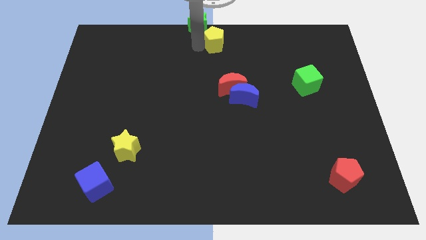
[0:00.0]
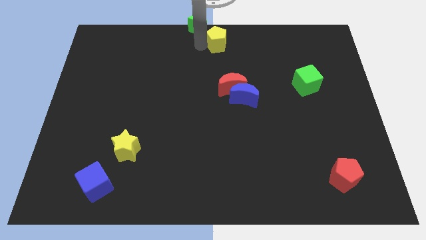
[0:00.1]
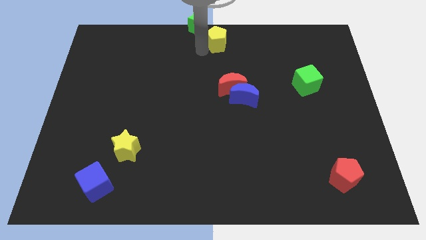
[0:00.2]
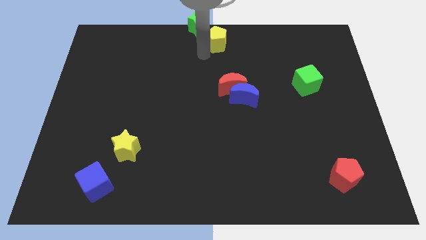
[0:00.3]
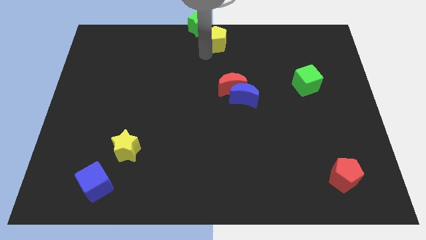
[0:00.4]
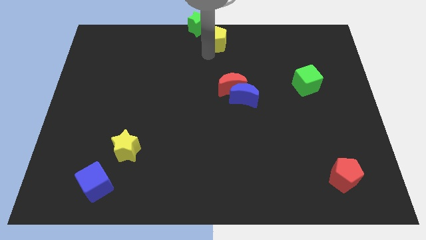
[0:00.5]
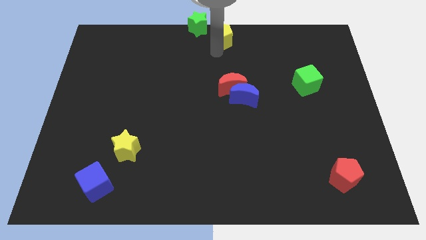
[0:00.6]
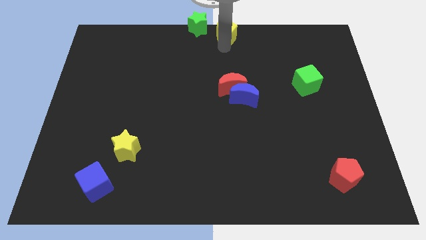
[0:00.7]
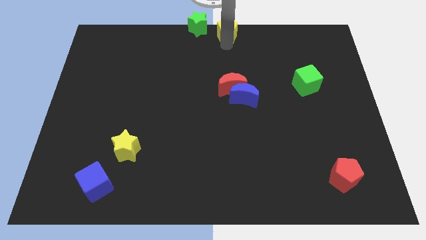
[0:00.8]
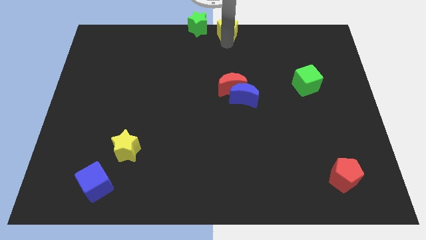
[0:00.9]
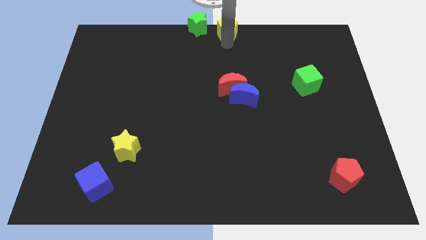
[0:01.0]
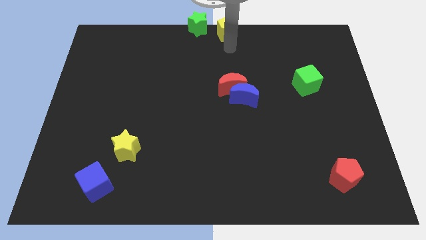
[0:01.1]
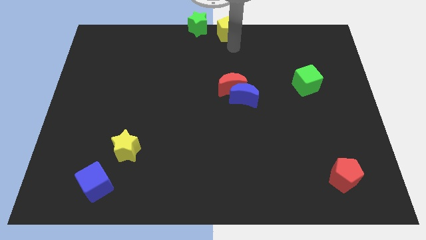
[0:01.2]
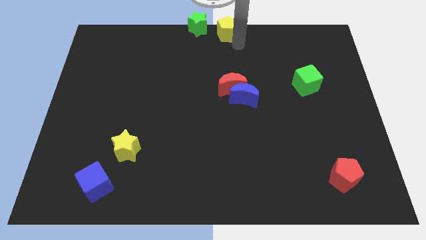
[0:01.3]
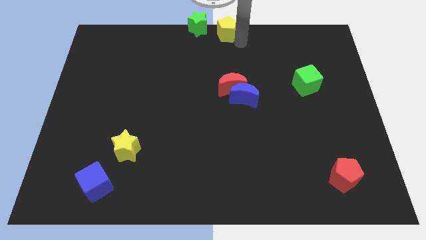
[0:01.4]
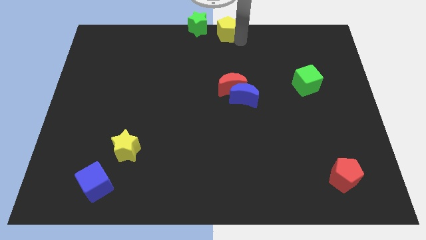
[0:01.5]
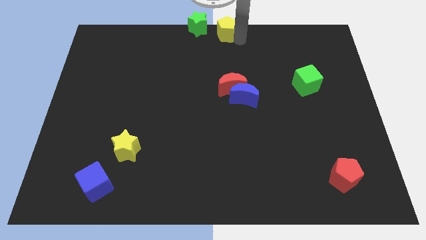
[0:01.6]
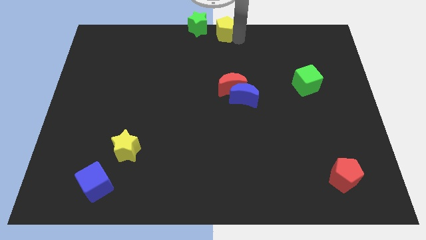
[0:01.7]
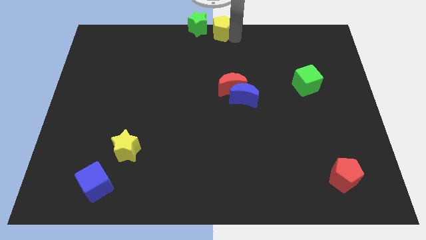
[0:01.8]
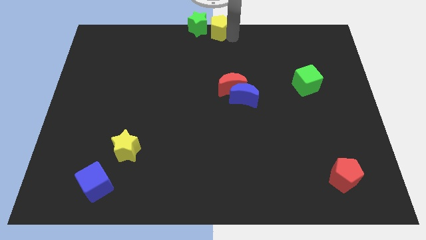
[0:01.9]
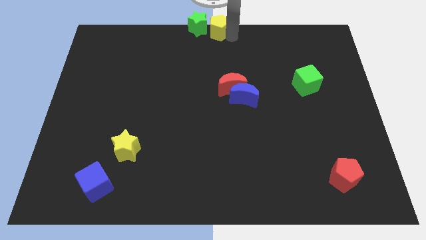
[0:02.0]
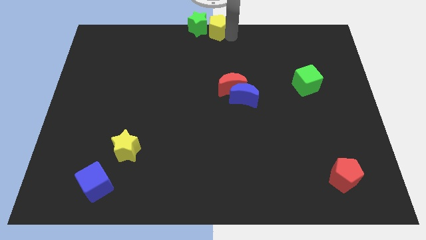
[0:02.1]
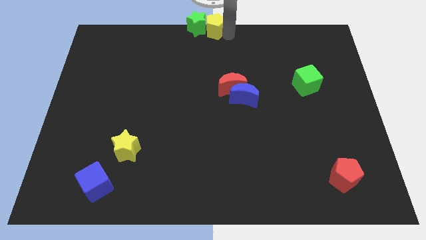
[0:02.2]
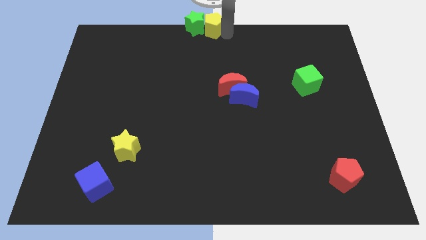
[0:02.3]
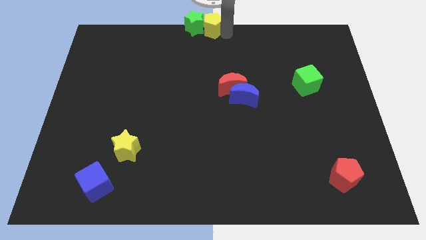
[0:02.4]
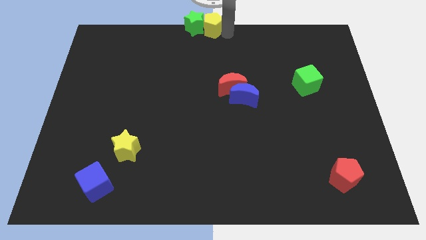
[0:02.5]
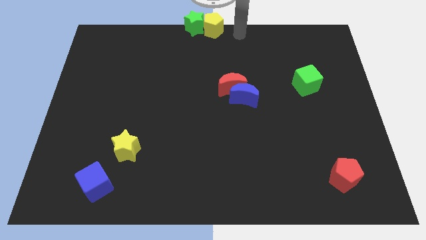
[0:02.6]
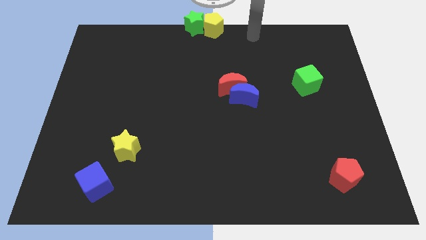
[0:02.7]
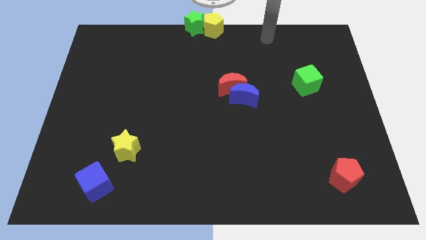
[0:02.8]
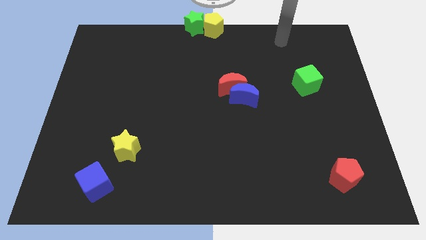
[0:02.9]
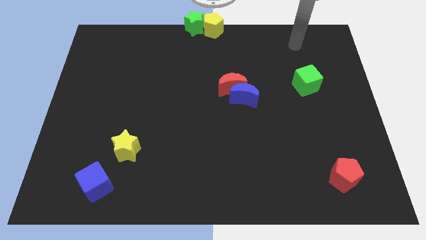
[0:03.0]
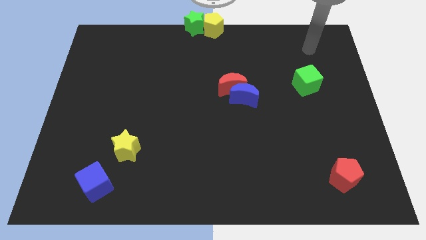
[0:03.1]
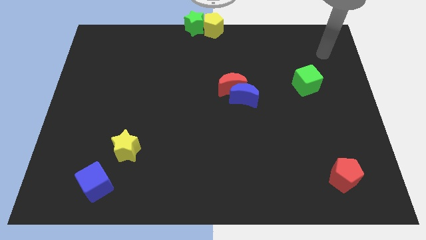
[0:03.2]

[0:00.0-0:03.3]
place the yellow pentagon to the right of the green star

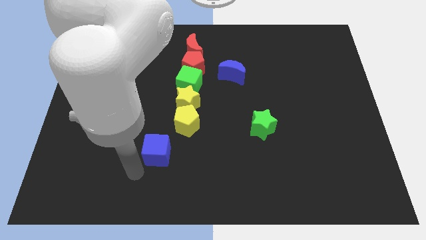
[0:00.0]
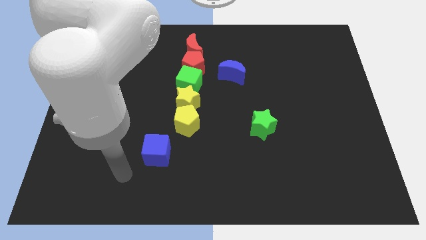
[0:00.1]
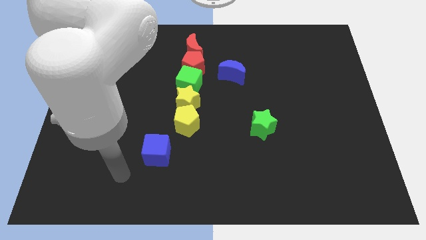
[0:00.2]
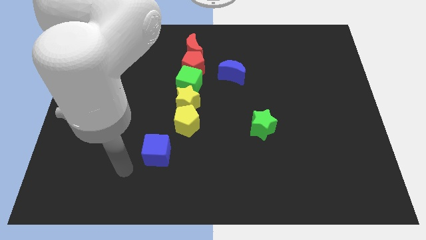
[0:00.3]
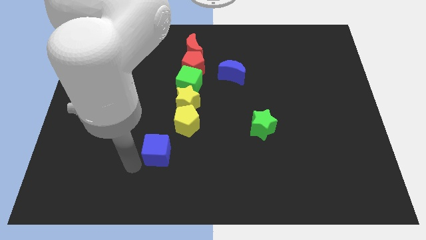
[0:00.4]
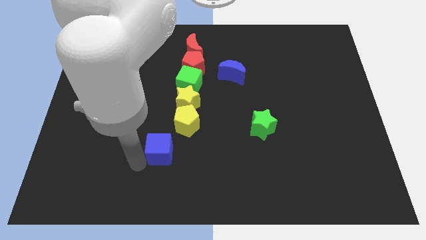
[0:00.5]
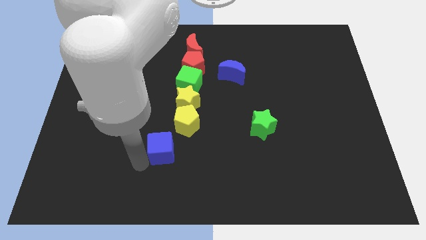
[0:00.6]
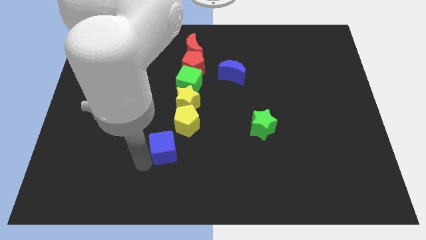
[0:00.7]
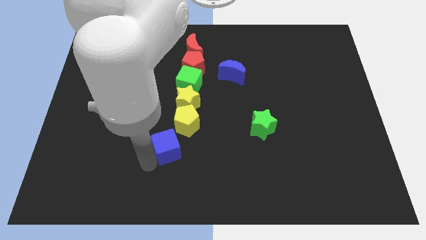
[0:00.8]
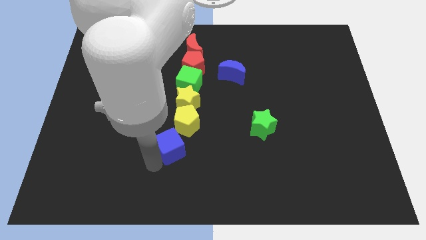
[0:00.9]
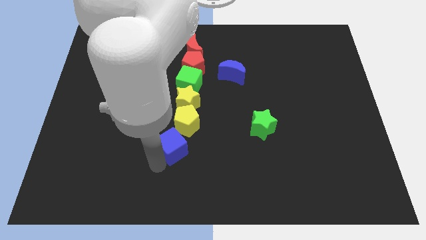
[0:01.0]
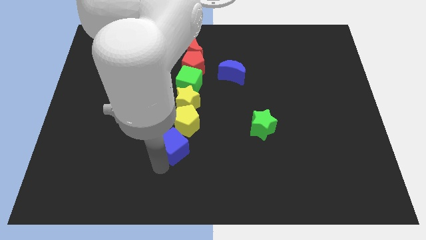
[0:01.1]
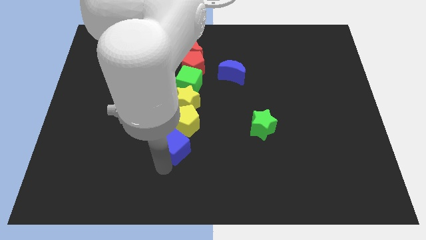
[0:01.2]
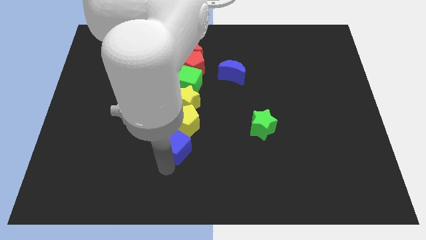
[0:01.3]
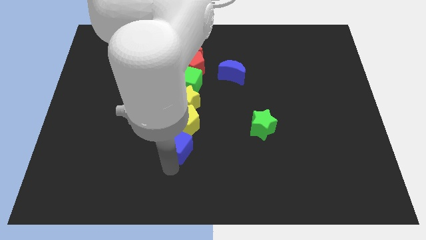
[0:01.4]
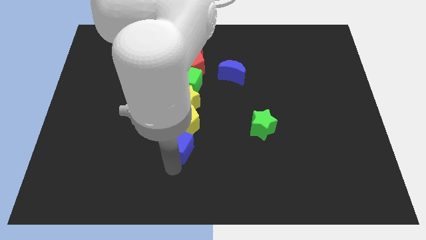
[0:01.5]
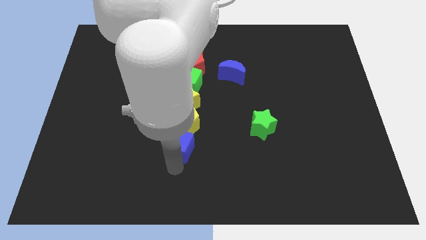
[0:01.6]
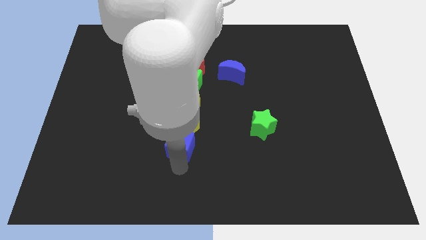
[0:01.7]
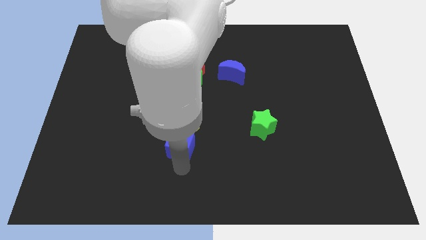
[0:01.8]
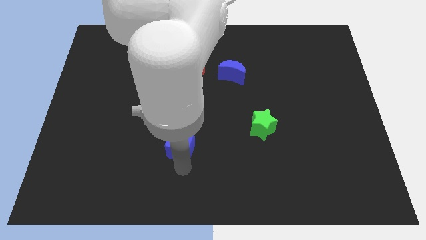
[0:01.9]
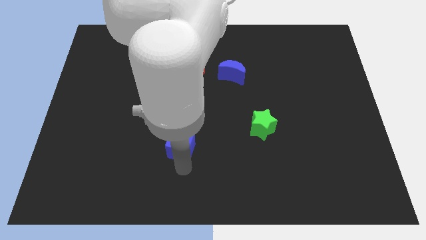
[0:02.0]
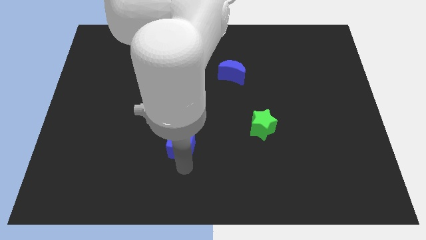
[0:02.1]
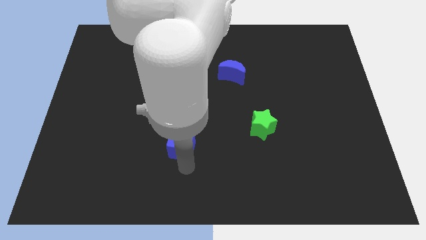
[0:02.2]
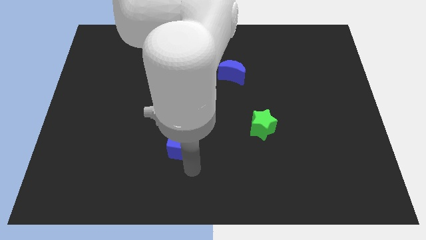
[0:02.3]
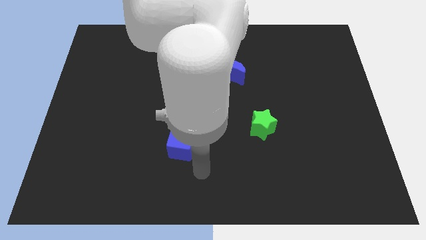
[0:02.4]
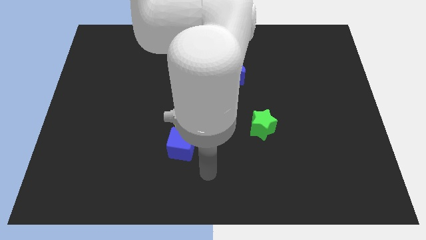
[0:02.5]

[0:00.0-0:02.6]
place teh bluie cube below yellow pentagon

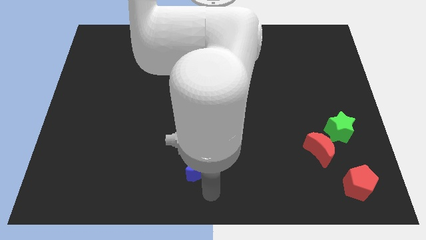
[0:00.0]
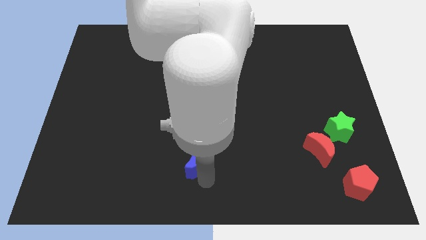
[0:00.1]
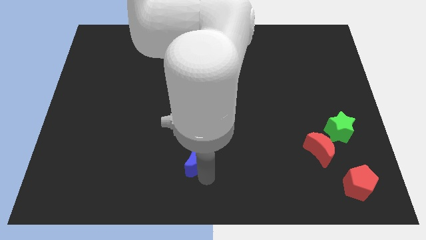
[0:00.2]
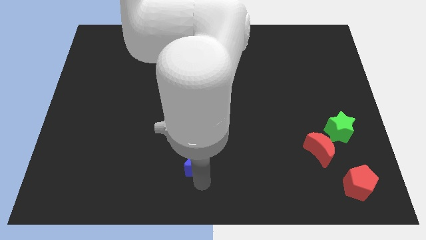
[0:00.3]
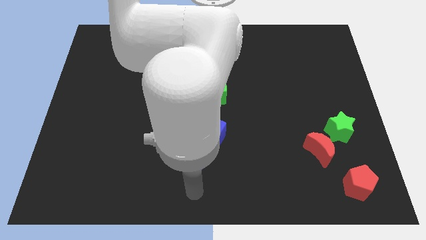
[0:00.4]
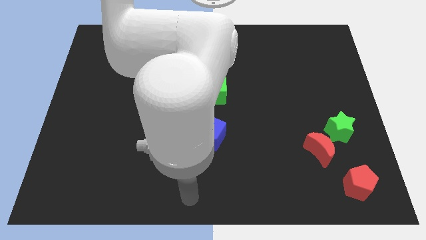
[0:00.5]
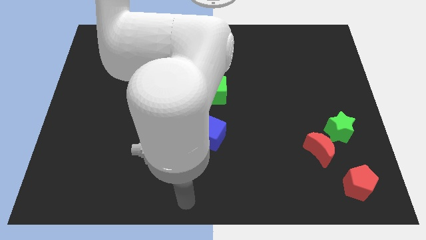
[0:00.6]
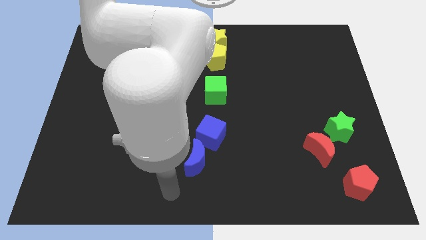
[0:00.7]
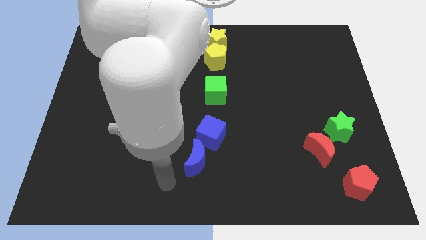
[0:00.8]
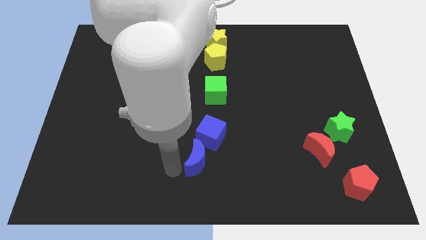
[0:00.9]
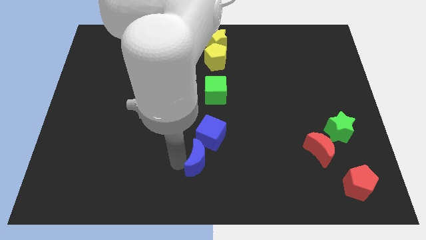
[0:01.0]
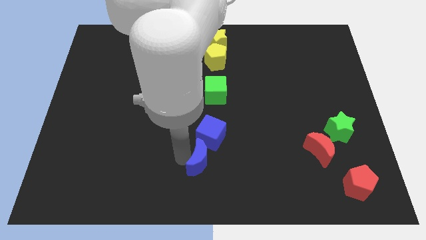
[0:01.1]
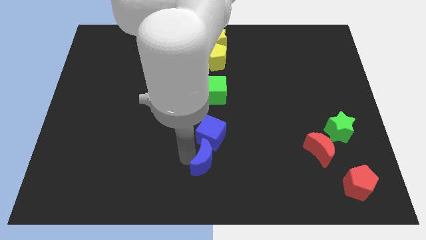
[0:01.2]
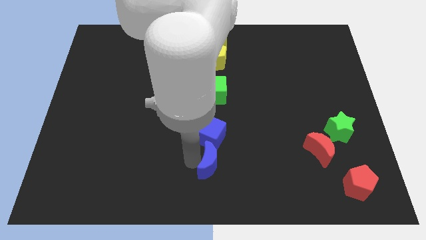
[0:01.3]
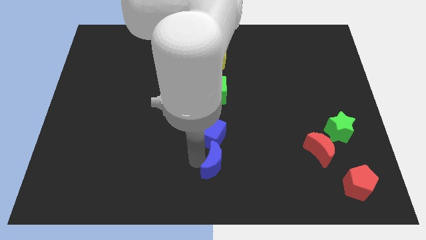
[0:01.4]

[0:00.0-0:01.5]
place the blue moon beside the blue cube to form a line

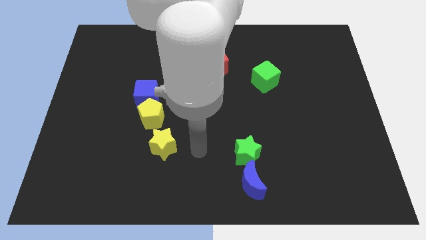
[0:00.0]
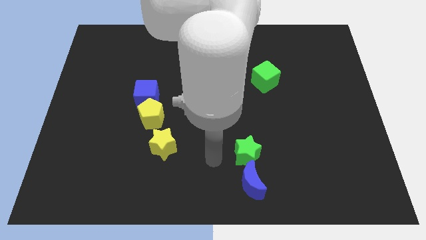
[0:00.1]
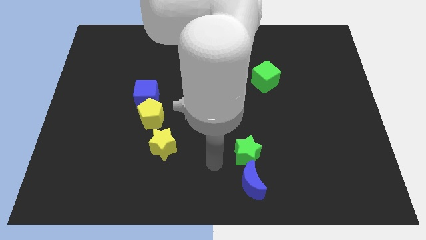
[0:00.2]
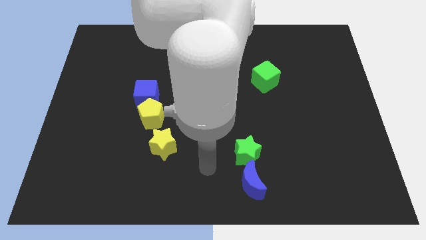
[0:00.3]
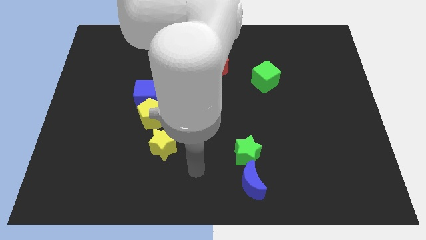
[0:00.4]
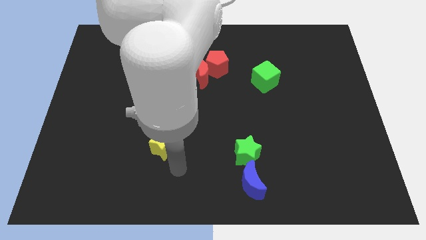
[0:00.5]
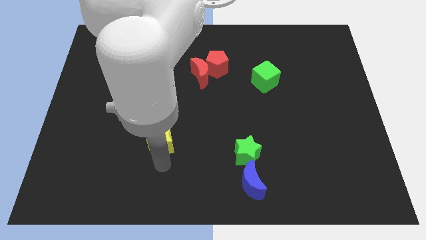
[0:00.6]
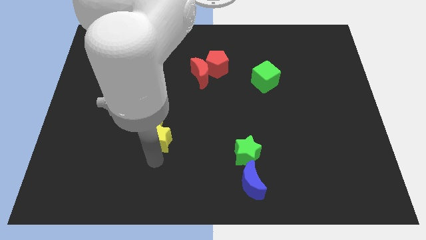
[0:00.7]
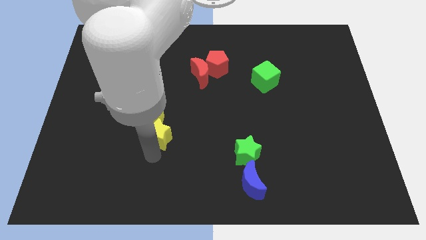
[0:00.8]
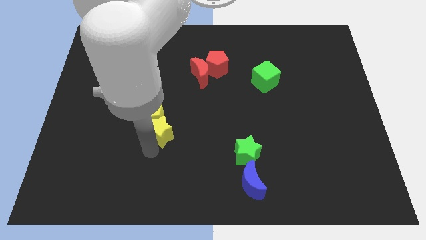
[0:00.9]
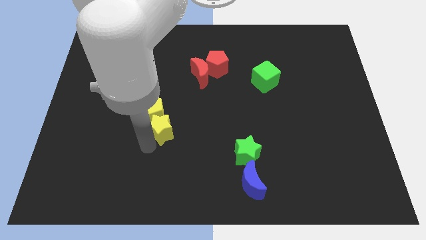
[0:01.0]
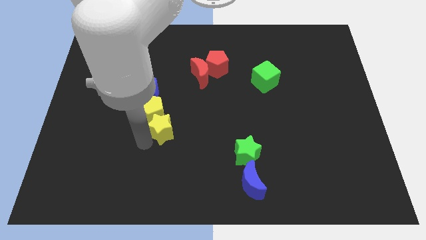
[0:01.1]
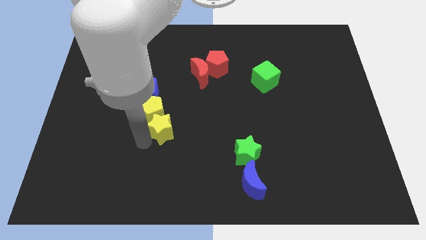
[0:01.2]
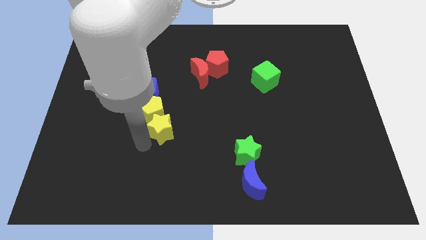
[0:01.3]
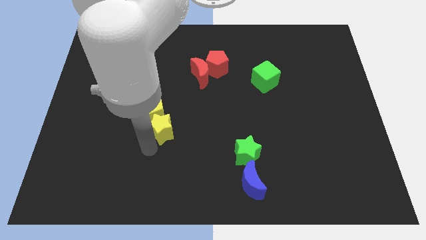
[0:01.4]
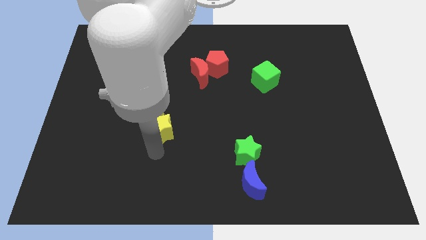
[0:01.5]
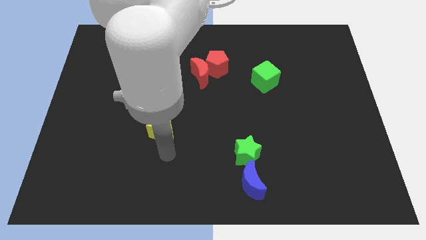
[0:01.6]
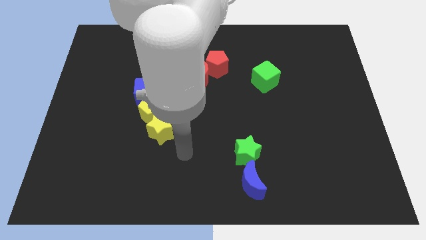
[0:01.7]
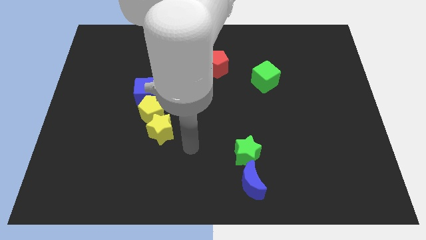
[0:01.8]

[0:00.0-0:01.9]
push the yellow star into yellow pentagon
